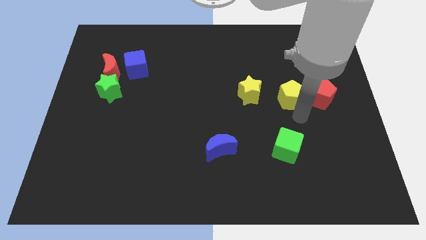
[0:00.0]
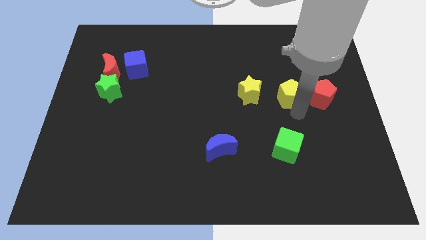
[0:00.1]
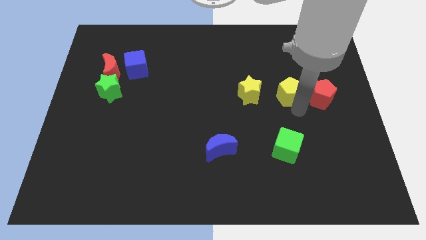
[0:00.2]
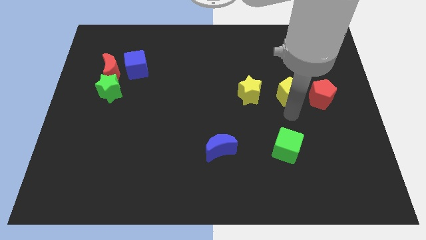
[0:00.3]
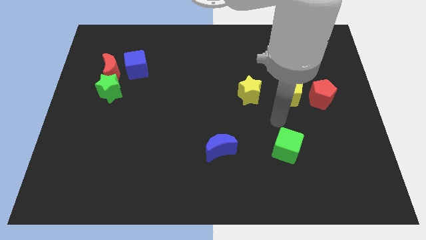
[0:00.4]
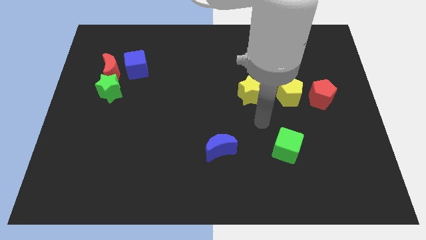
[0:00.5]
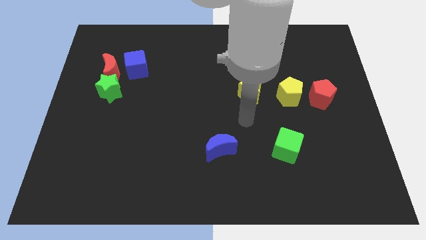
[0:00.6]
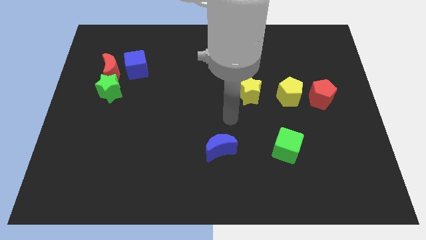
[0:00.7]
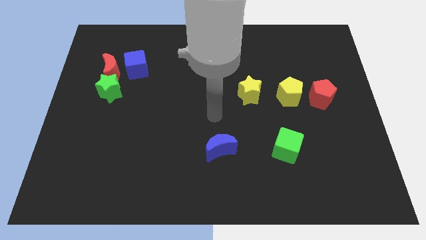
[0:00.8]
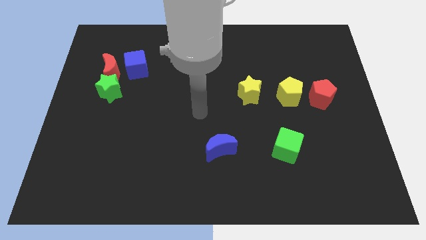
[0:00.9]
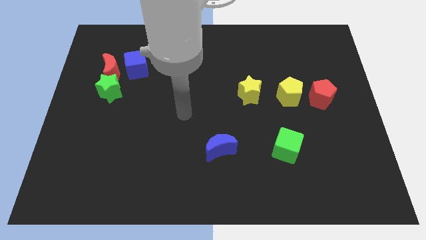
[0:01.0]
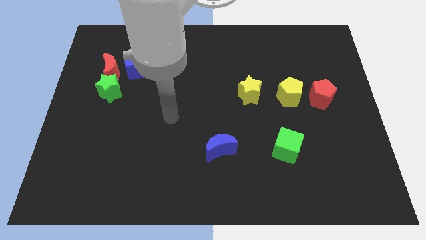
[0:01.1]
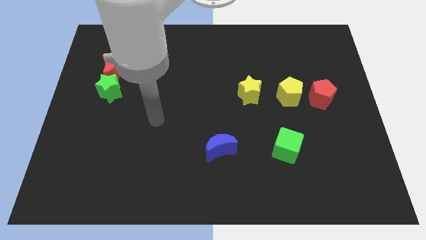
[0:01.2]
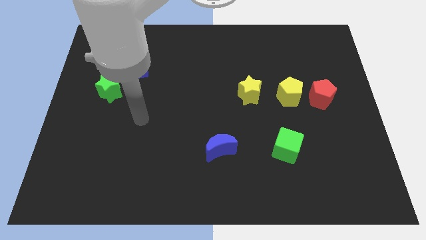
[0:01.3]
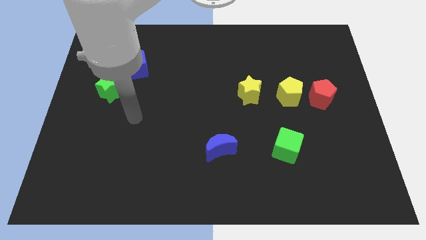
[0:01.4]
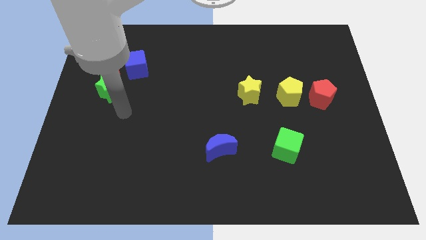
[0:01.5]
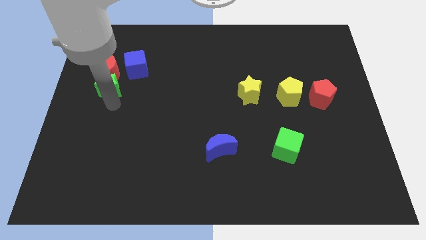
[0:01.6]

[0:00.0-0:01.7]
slightly push the yellow pentagon upwards

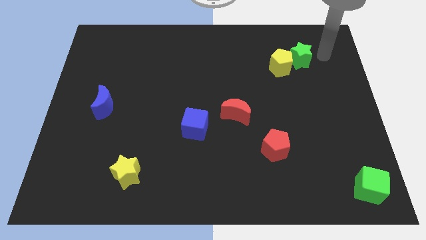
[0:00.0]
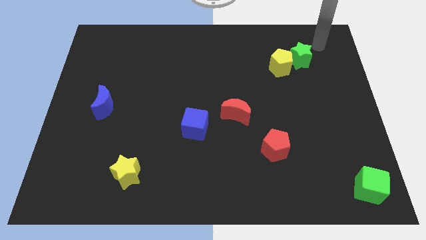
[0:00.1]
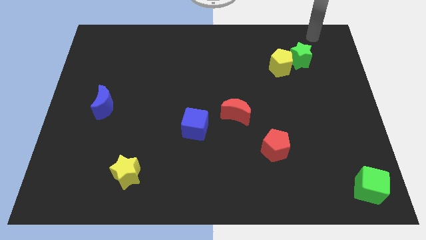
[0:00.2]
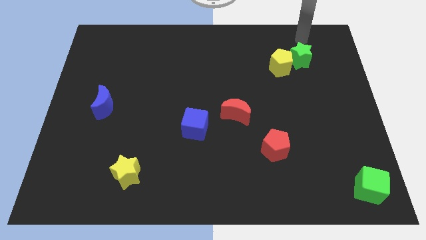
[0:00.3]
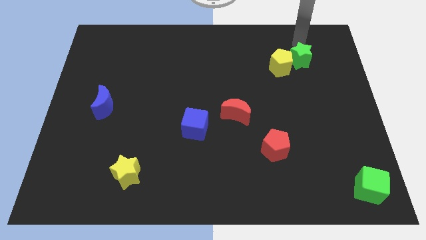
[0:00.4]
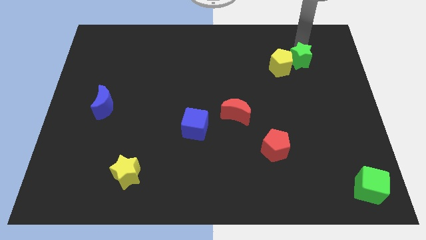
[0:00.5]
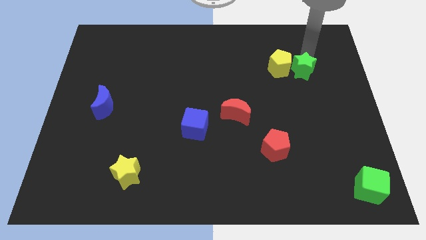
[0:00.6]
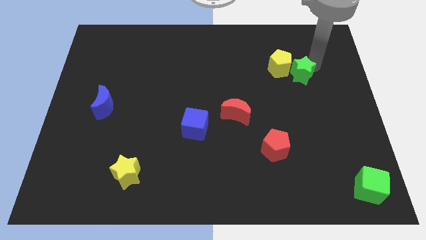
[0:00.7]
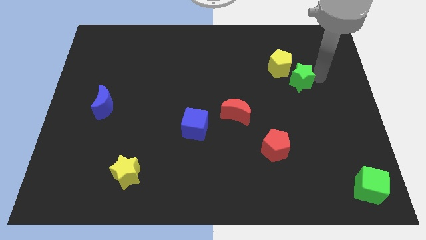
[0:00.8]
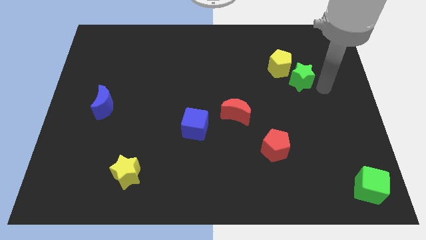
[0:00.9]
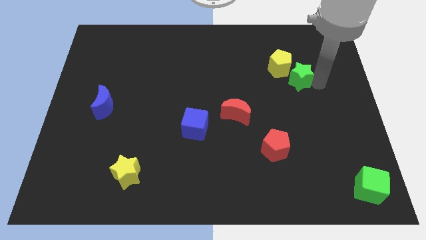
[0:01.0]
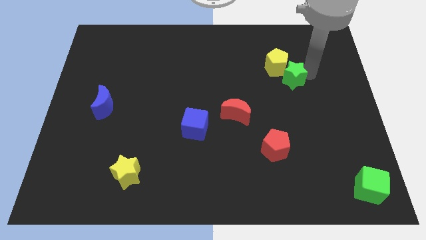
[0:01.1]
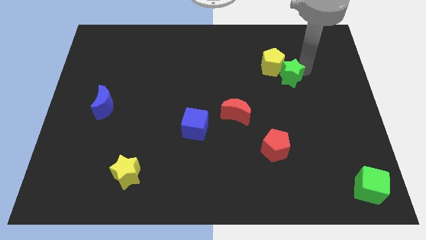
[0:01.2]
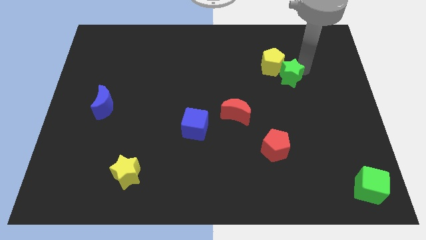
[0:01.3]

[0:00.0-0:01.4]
move green star slightly down

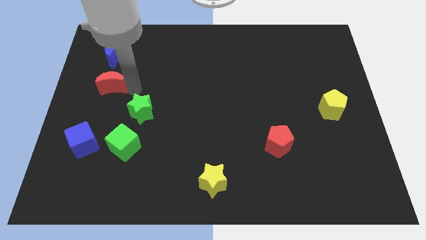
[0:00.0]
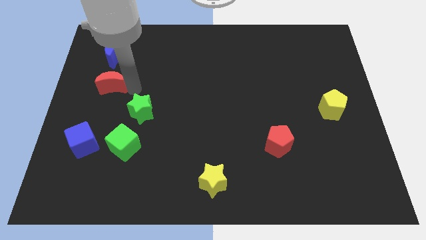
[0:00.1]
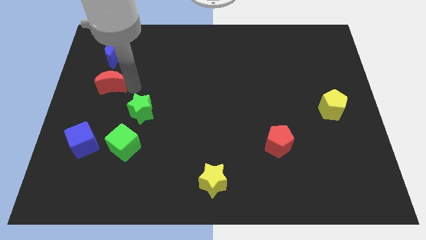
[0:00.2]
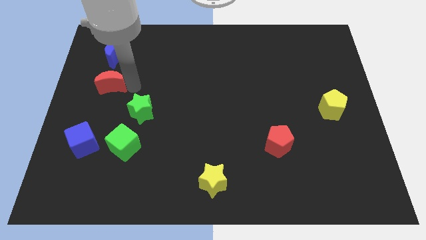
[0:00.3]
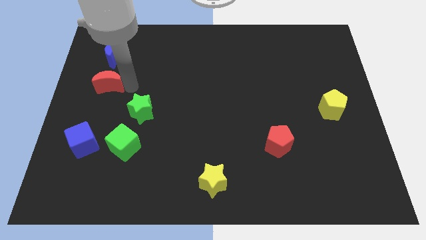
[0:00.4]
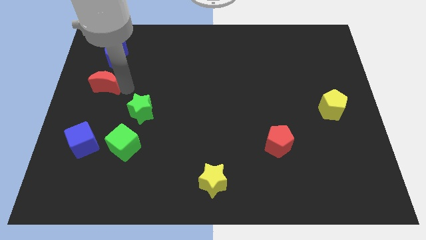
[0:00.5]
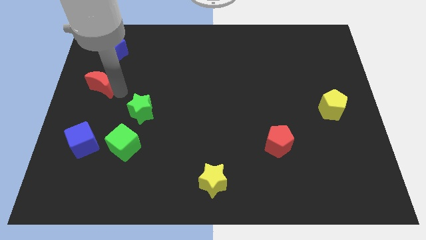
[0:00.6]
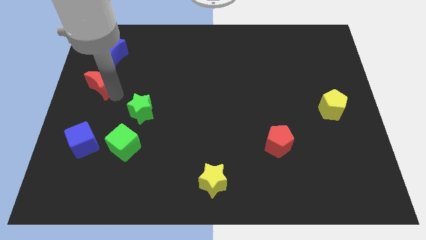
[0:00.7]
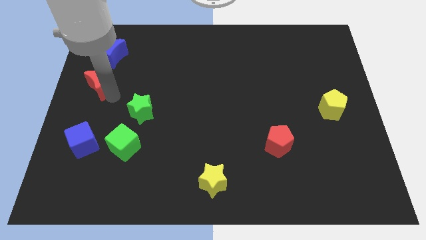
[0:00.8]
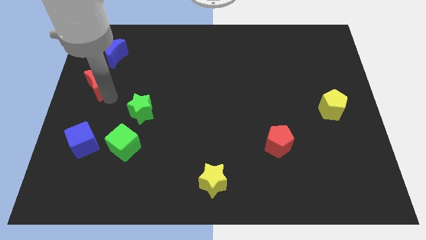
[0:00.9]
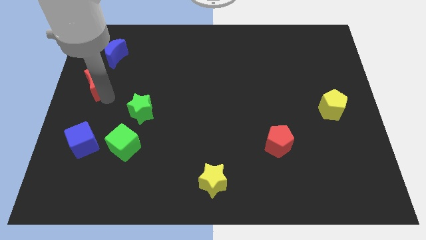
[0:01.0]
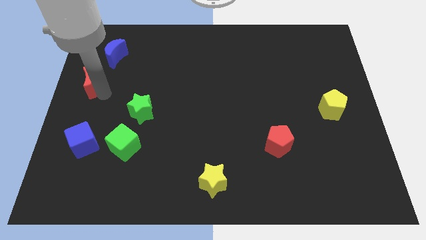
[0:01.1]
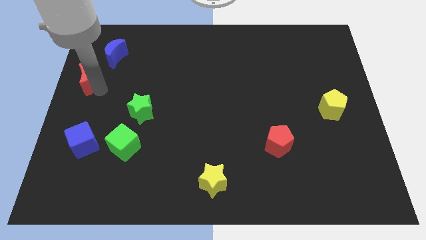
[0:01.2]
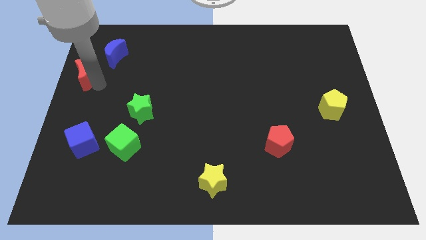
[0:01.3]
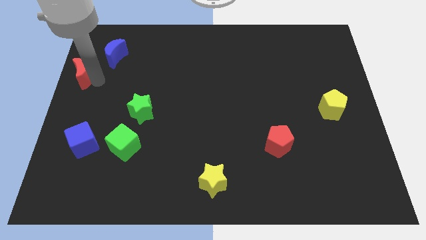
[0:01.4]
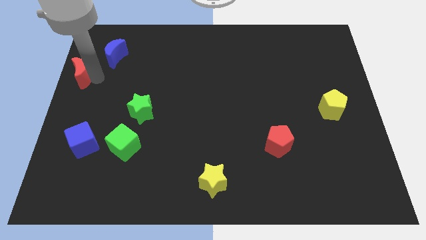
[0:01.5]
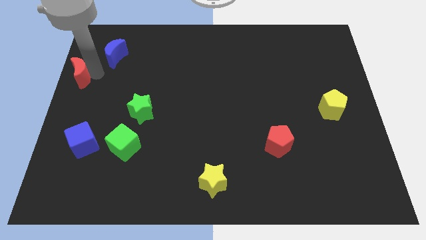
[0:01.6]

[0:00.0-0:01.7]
push the red crescent towards the top left of the board

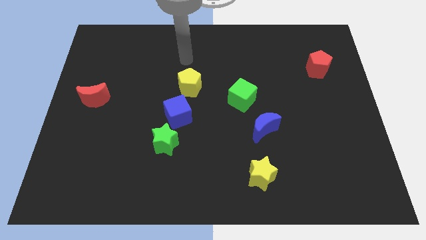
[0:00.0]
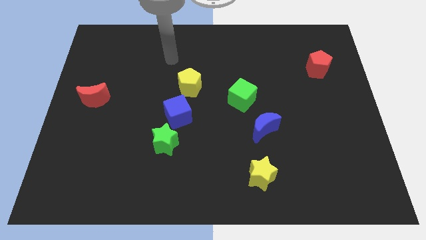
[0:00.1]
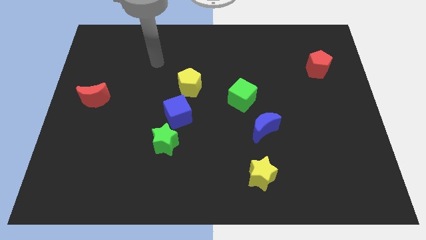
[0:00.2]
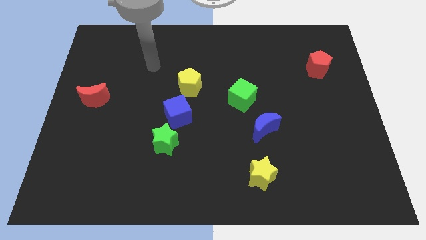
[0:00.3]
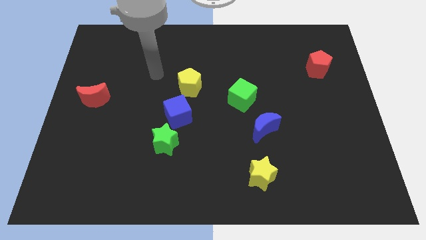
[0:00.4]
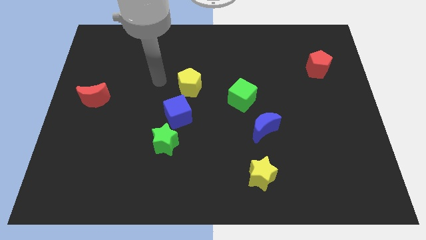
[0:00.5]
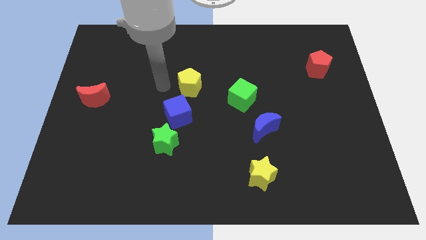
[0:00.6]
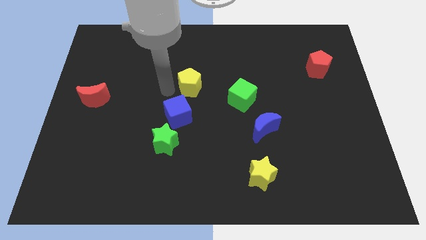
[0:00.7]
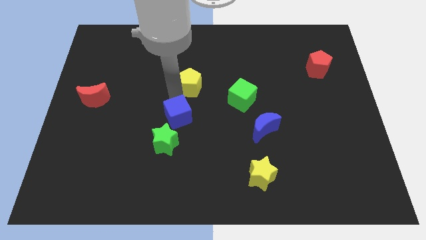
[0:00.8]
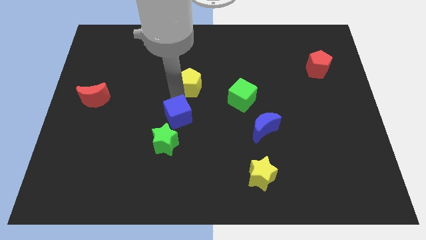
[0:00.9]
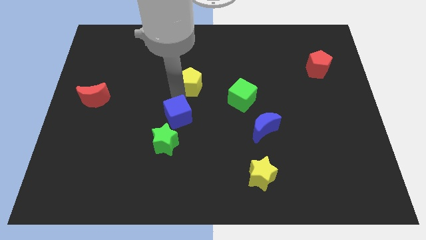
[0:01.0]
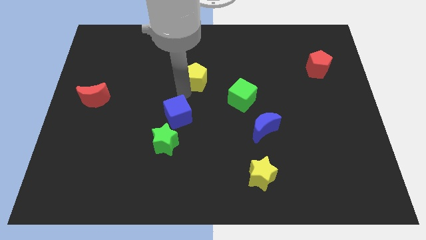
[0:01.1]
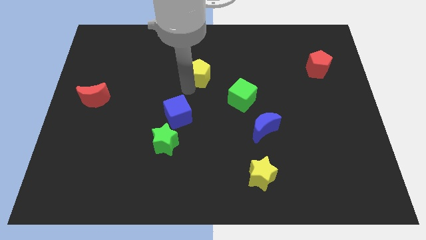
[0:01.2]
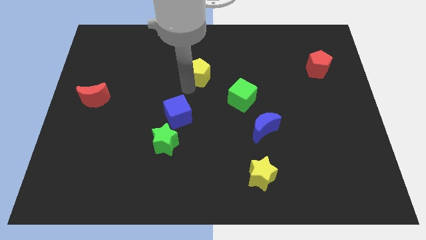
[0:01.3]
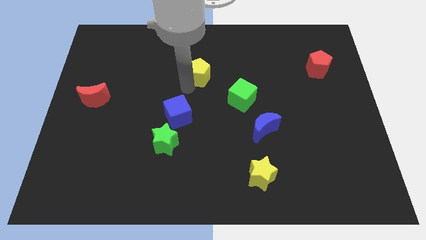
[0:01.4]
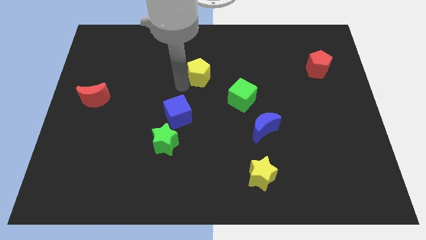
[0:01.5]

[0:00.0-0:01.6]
move the yellow pentagon diagonally to the top left of the green cube

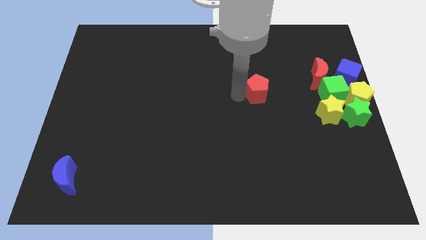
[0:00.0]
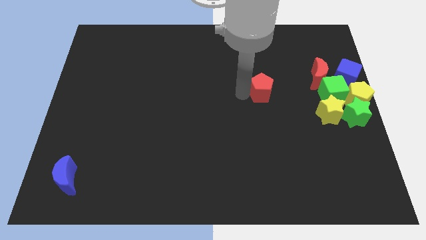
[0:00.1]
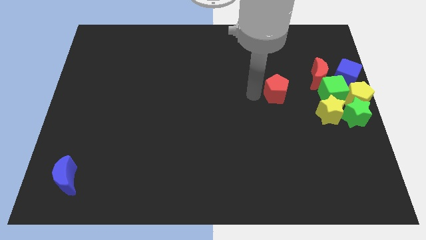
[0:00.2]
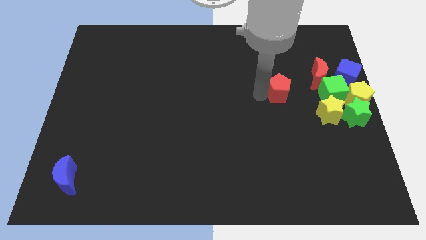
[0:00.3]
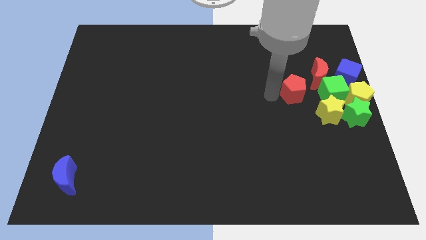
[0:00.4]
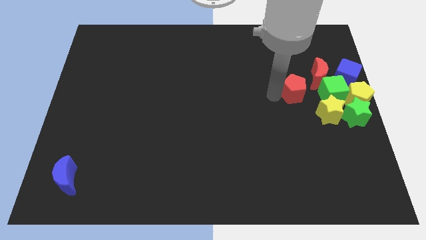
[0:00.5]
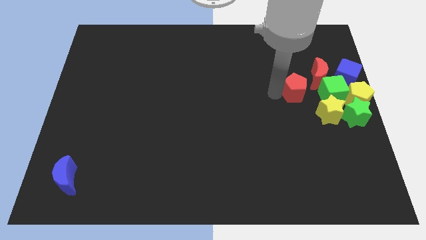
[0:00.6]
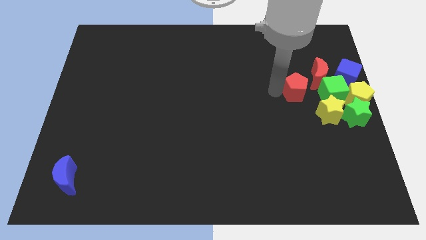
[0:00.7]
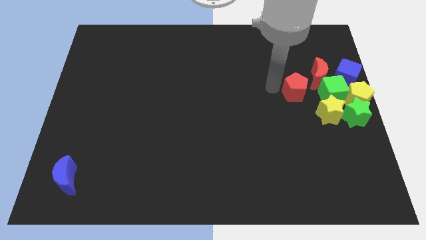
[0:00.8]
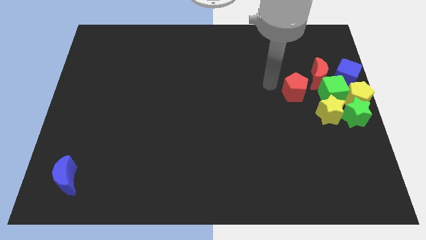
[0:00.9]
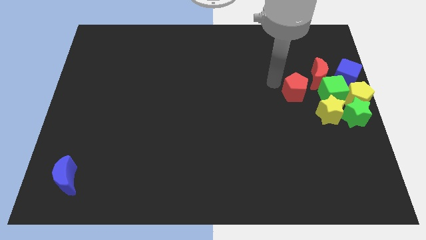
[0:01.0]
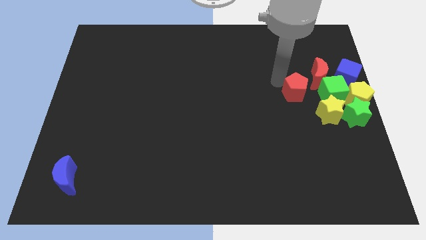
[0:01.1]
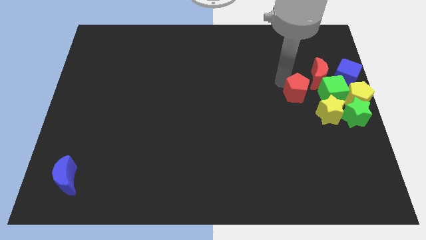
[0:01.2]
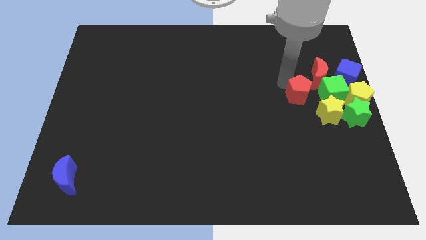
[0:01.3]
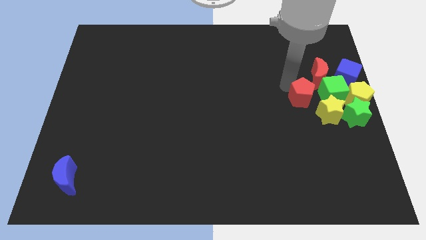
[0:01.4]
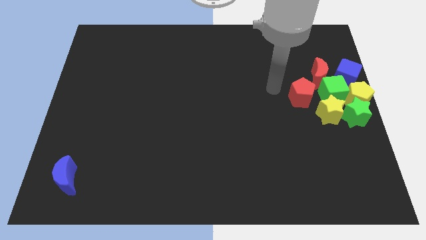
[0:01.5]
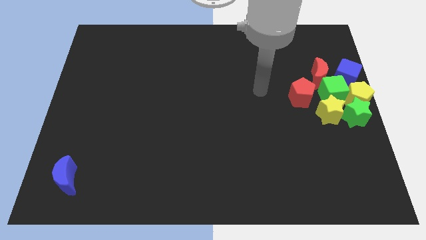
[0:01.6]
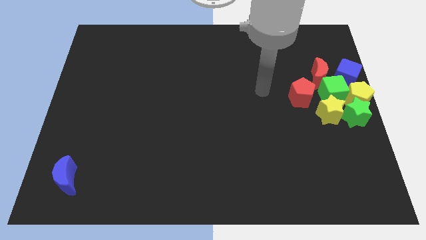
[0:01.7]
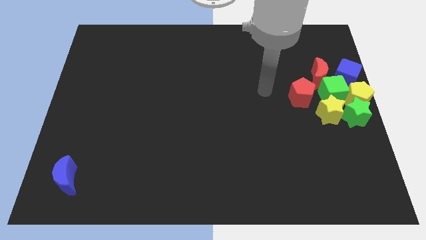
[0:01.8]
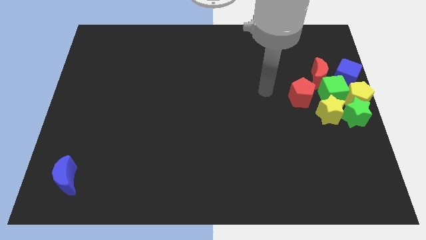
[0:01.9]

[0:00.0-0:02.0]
move the red pentagon near to the green cube

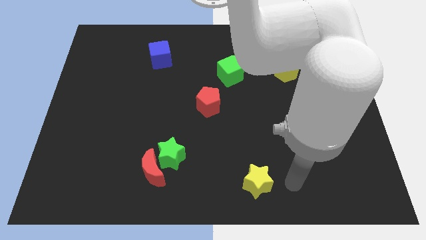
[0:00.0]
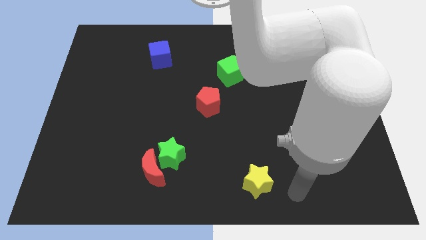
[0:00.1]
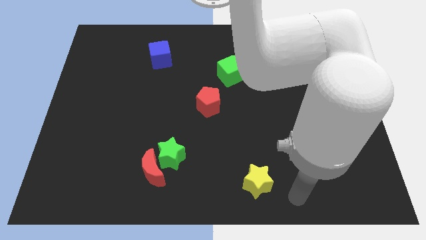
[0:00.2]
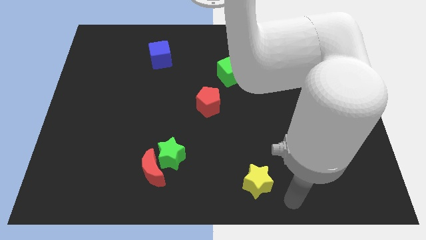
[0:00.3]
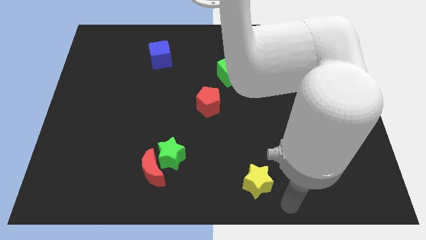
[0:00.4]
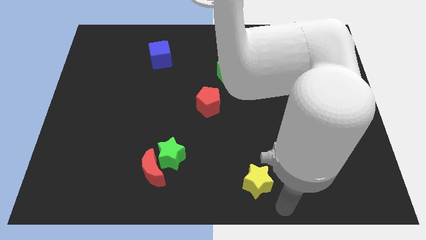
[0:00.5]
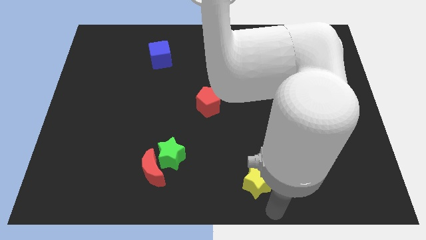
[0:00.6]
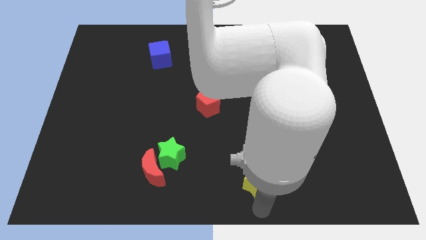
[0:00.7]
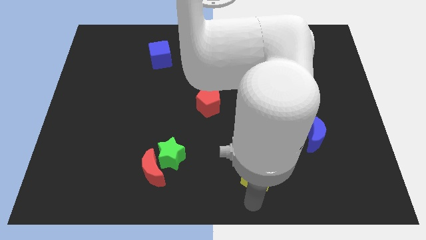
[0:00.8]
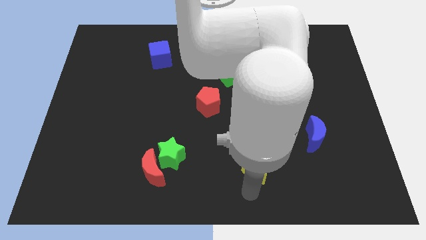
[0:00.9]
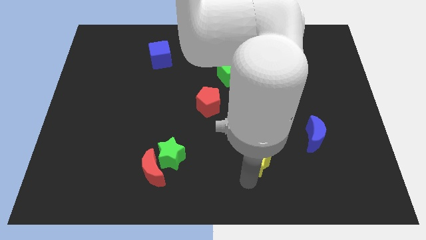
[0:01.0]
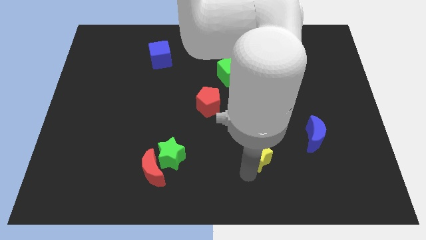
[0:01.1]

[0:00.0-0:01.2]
place yellow star towards upward
